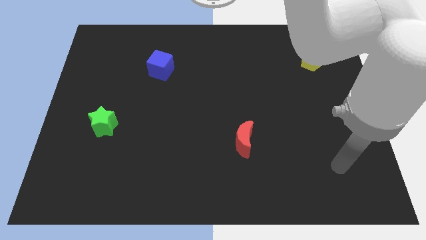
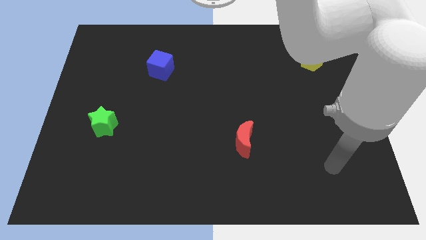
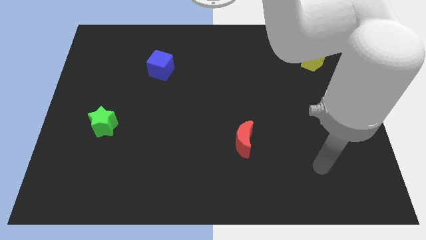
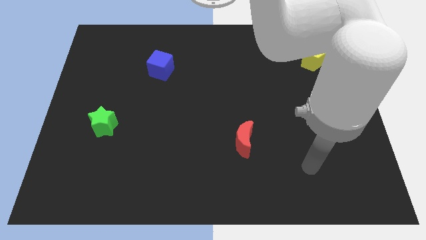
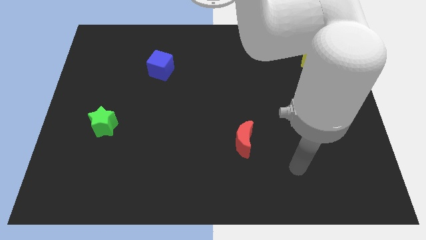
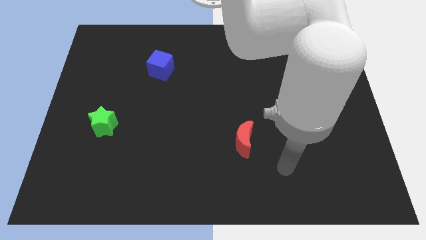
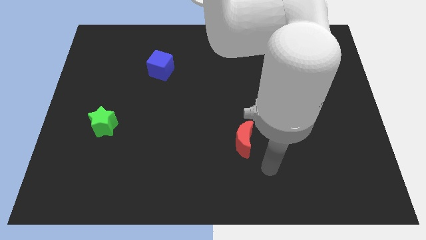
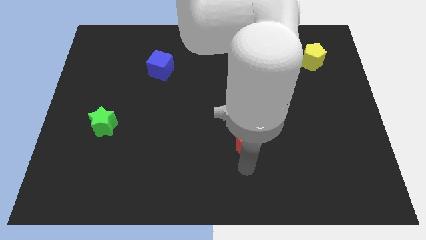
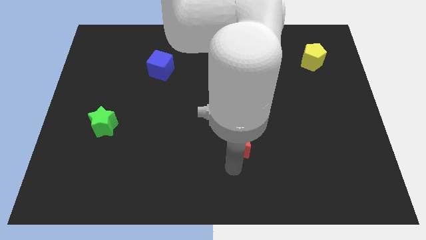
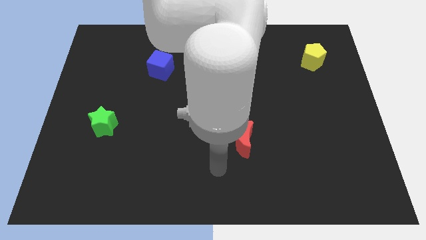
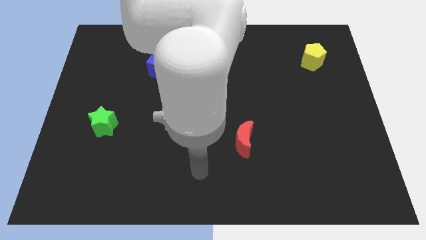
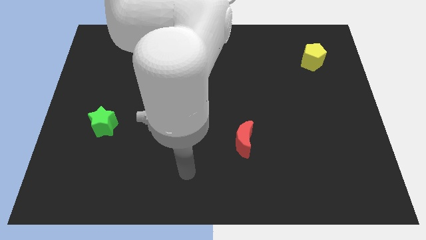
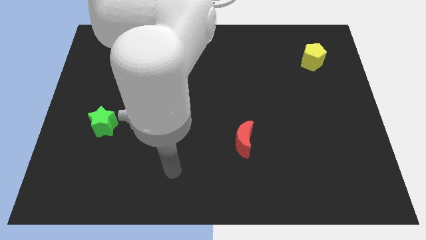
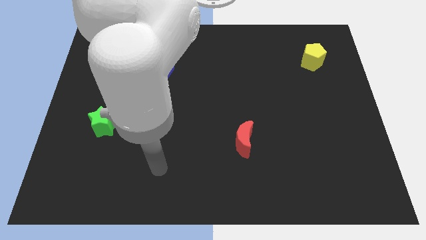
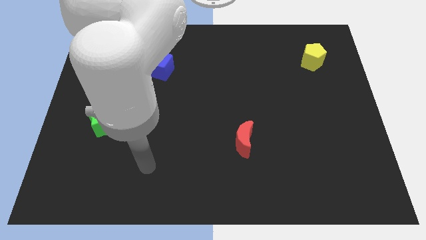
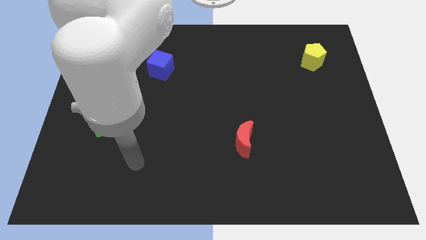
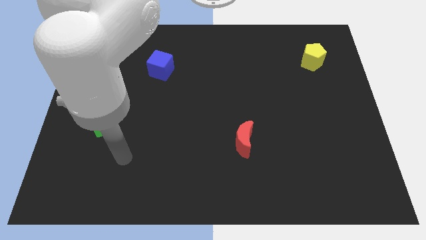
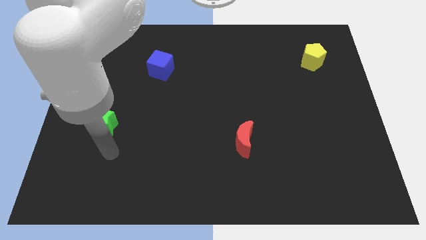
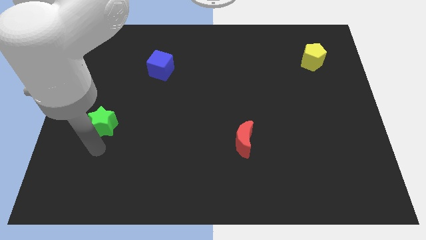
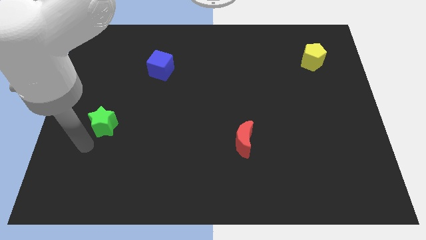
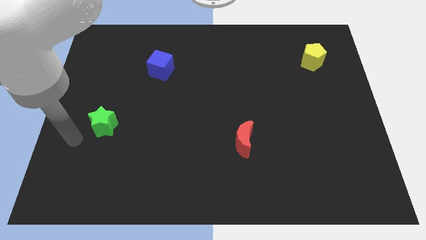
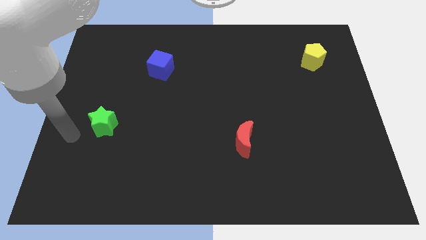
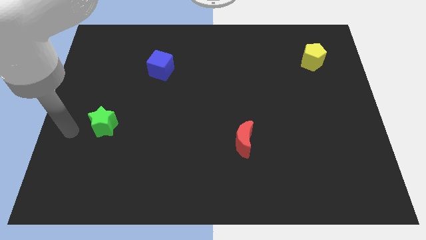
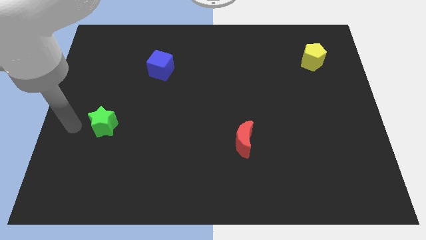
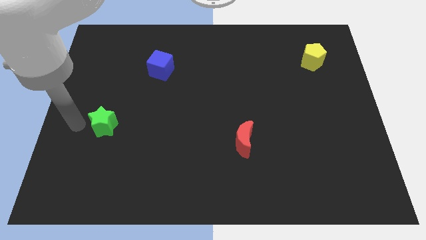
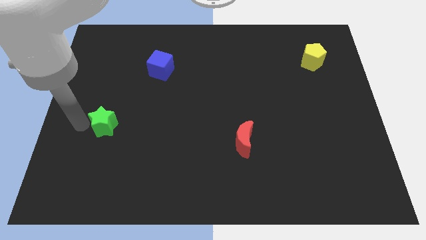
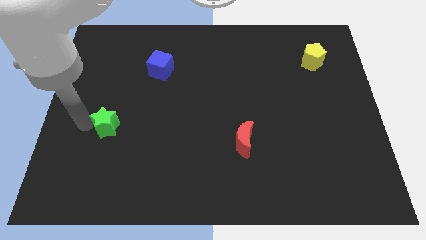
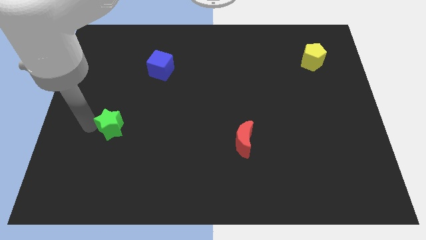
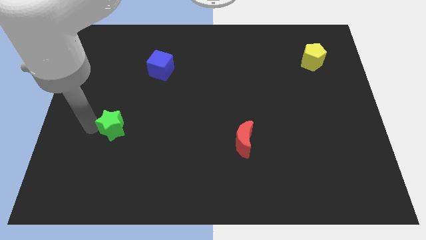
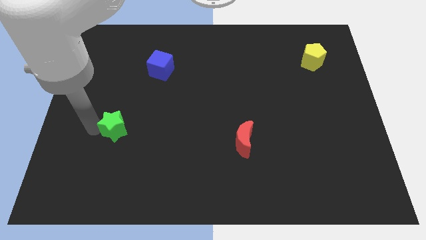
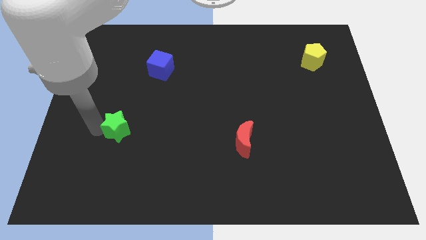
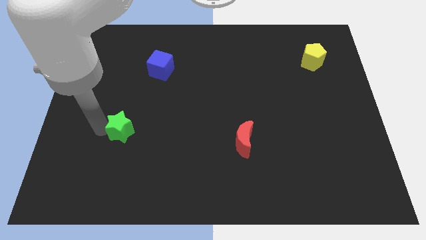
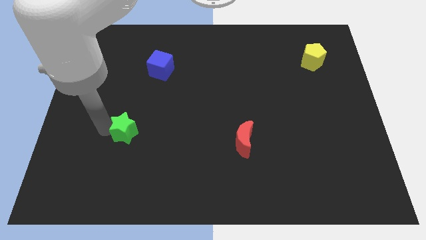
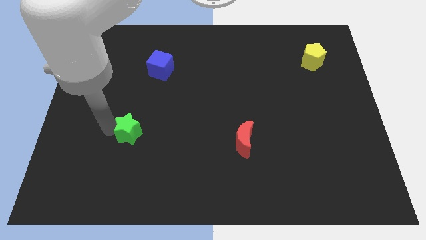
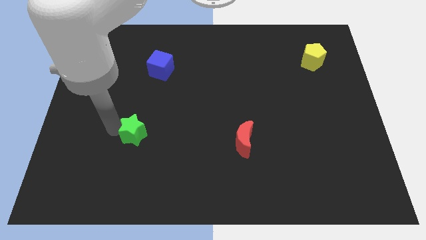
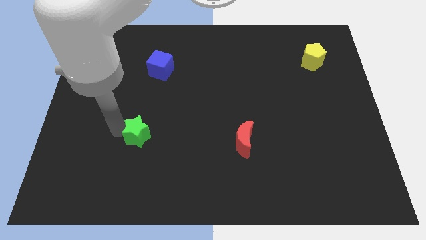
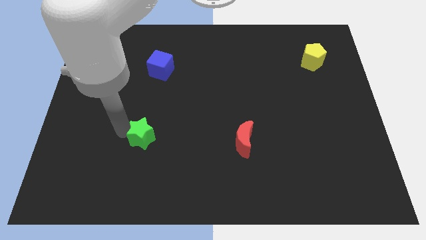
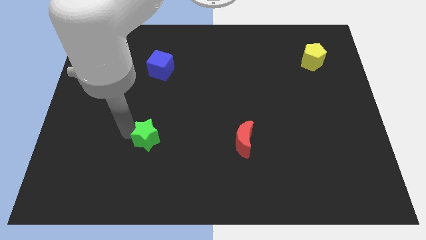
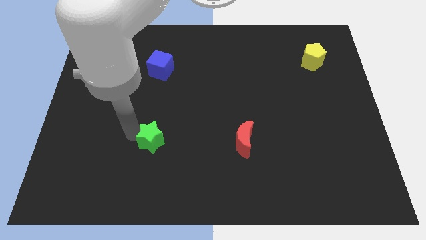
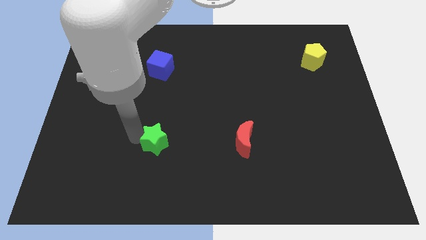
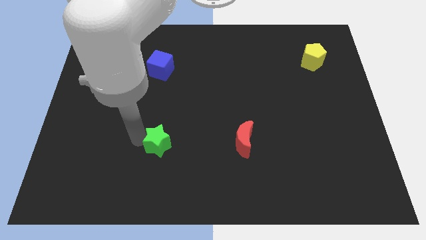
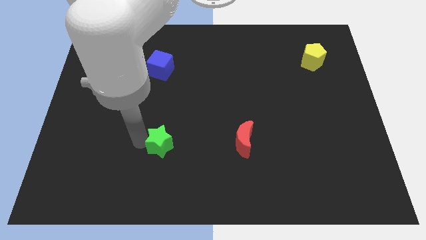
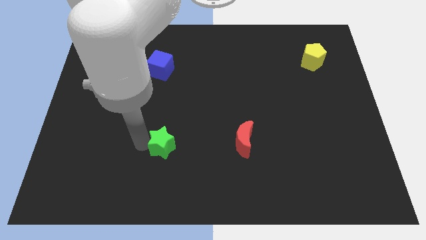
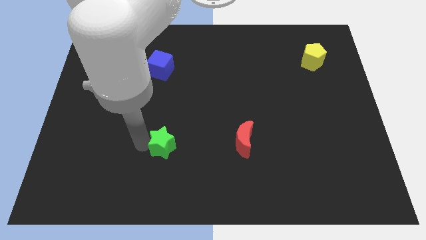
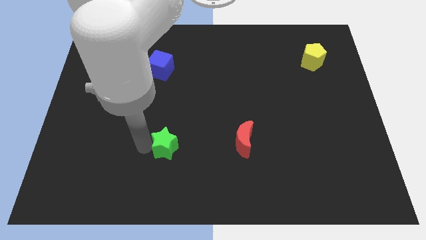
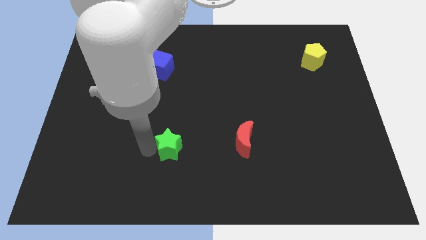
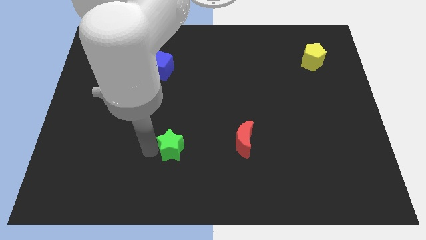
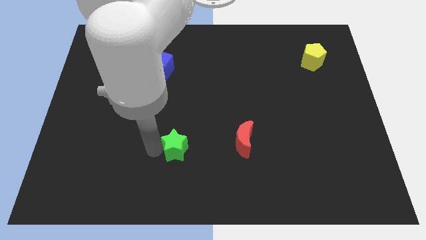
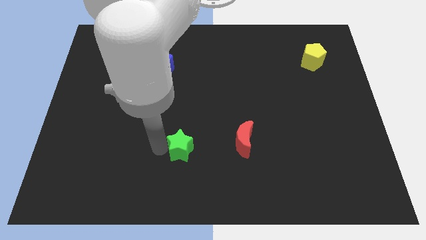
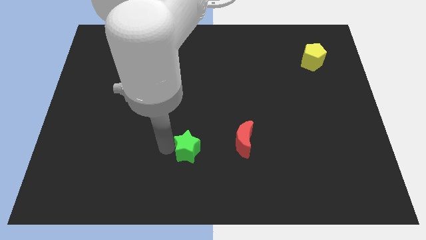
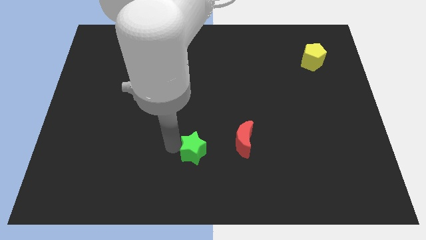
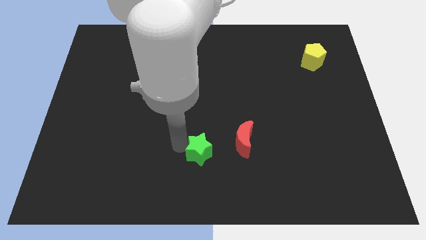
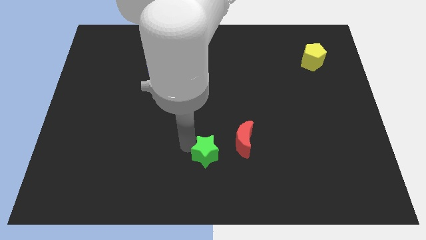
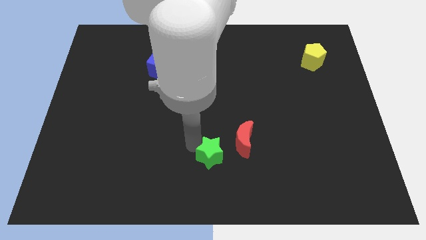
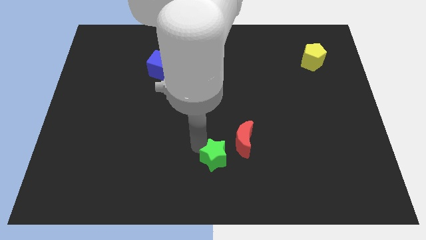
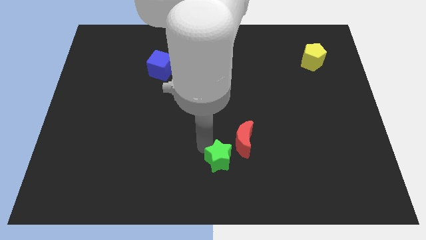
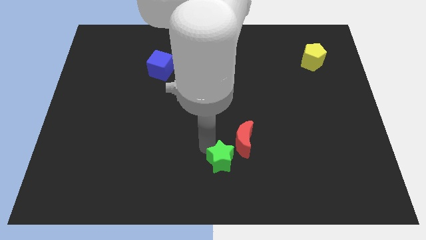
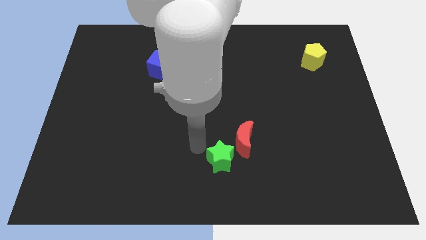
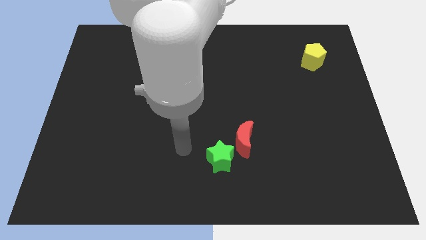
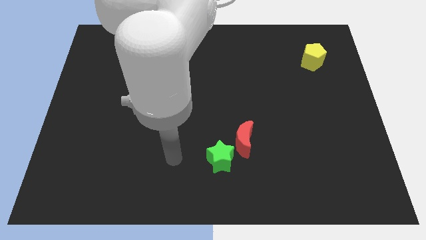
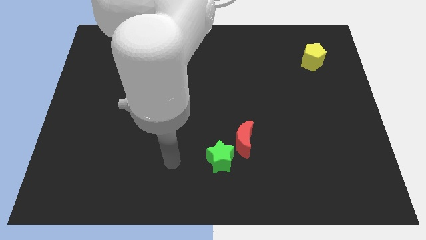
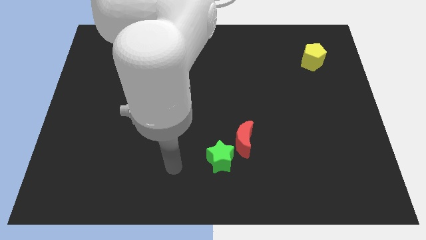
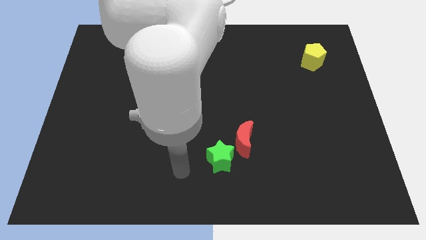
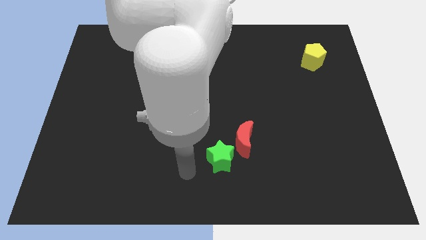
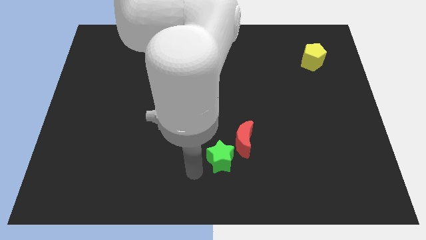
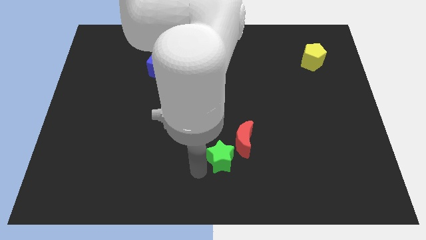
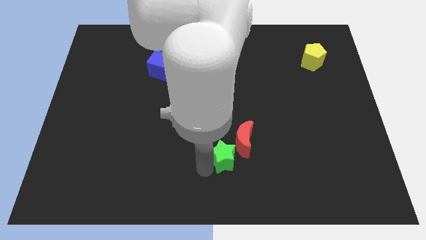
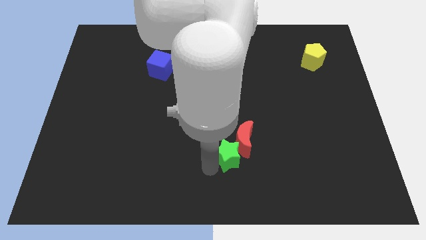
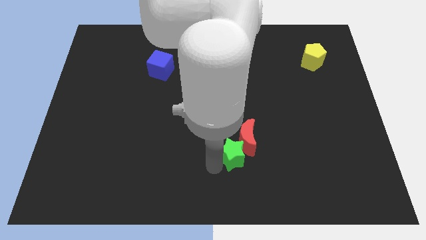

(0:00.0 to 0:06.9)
move the star close to the red block

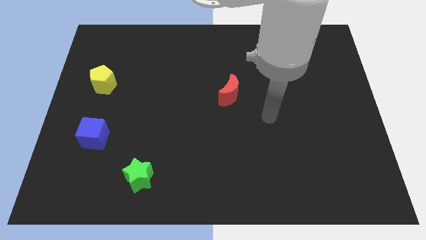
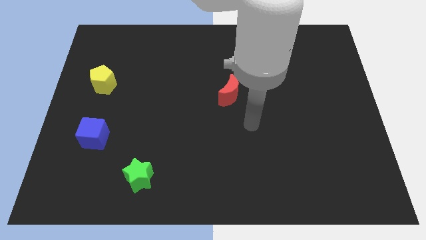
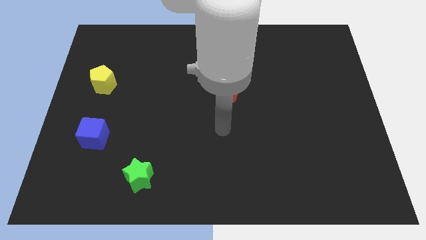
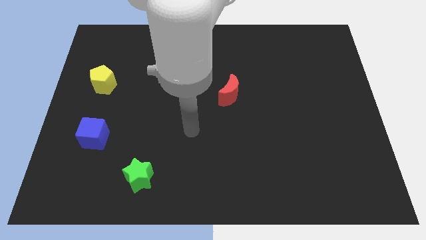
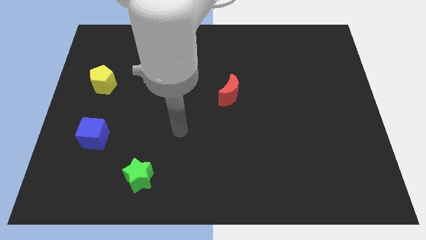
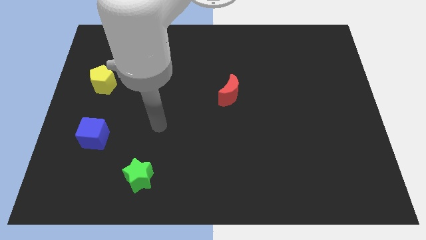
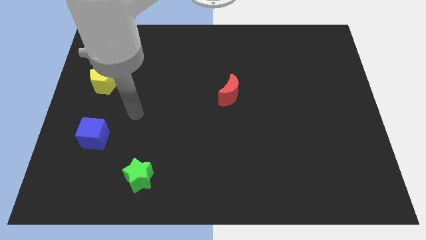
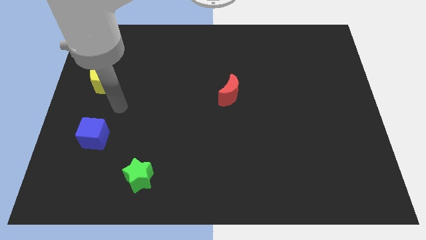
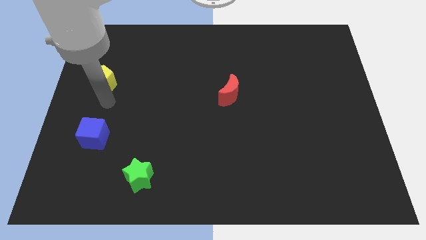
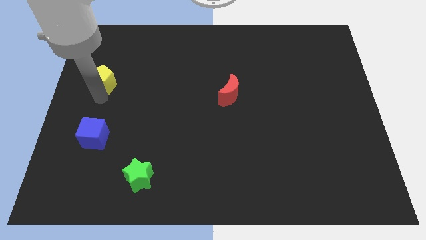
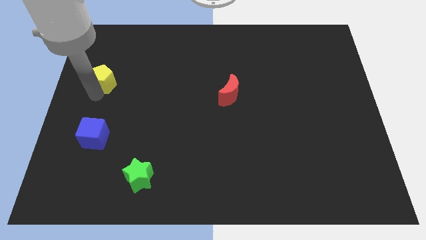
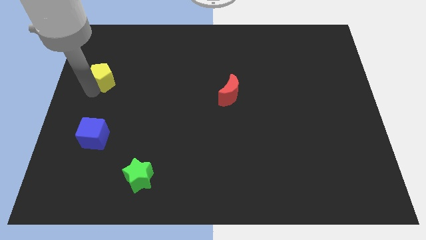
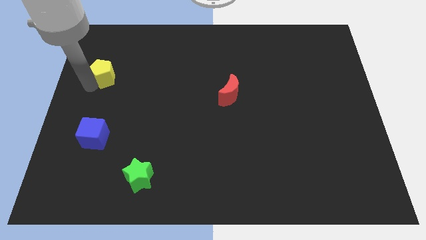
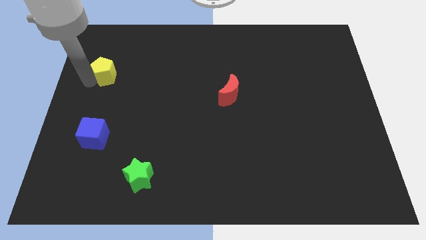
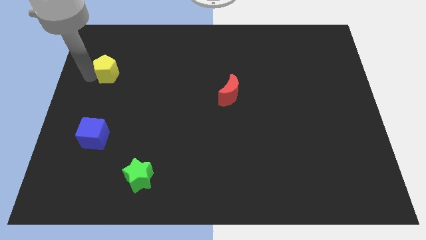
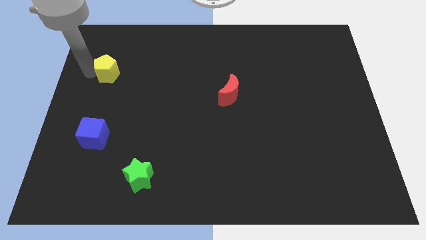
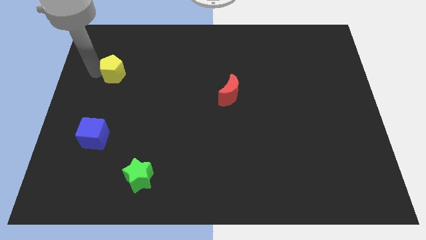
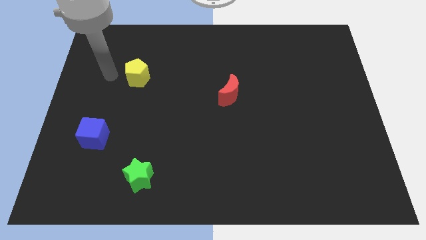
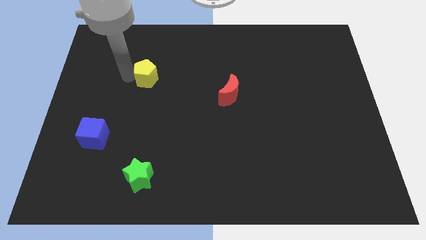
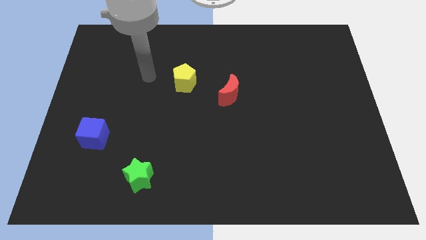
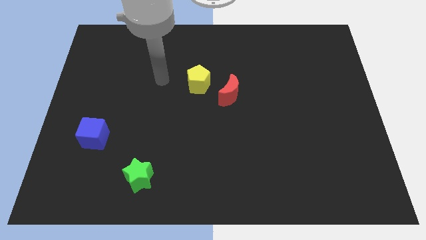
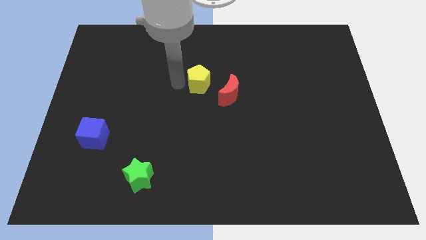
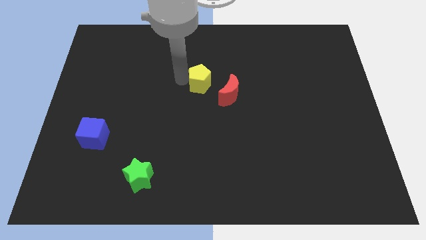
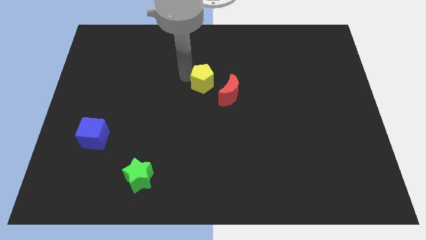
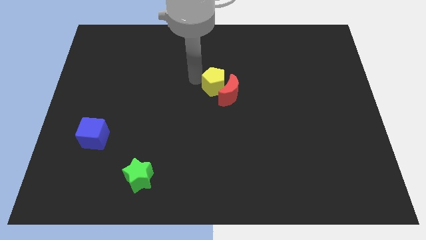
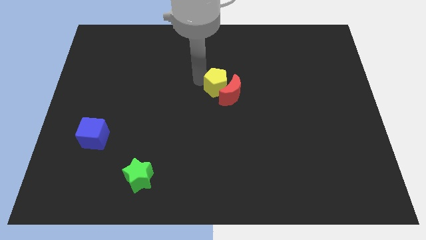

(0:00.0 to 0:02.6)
move the pentagon towards the red moon
